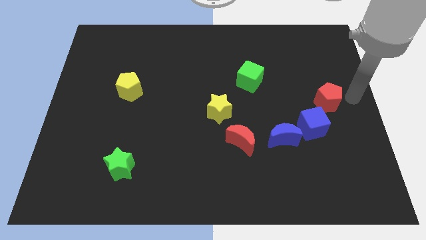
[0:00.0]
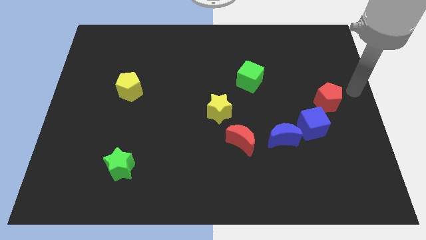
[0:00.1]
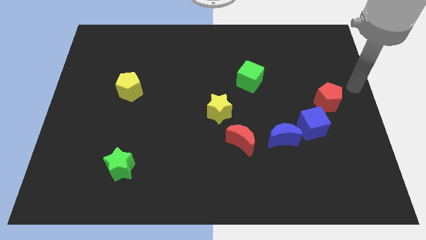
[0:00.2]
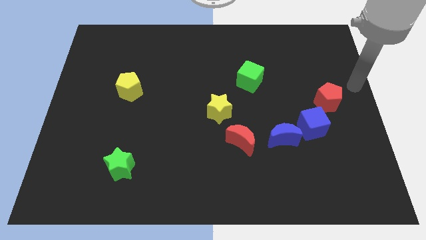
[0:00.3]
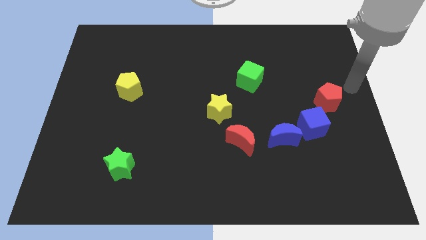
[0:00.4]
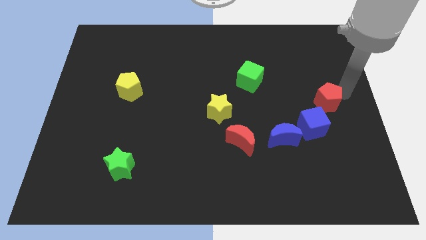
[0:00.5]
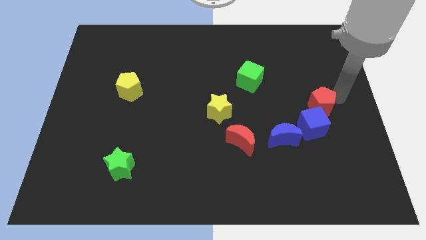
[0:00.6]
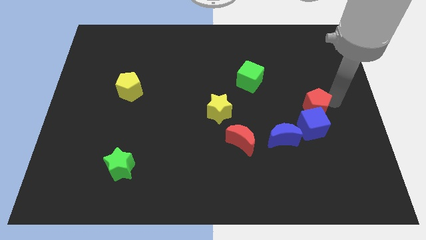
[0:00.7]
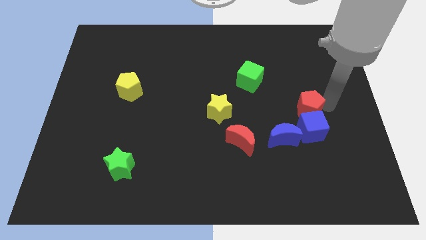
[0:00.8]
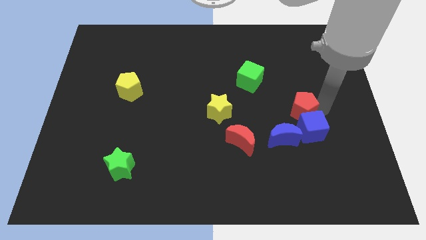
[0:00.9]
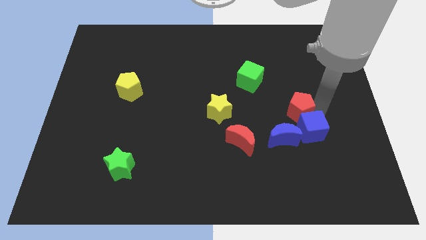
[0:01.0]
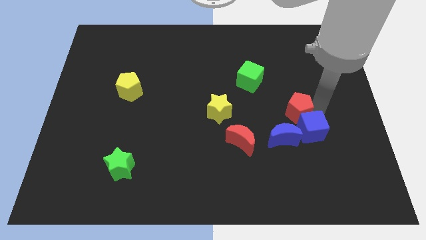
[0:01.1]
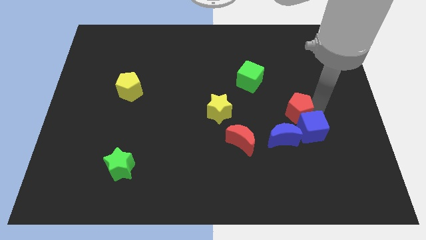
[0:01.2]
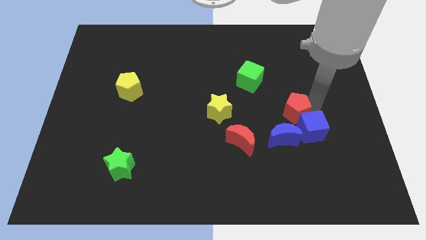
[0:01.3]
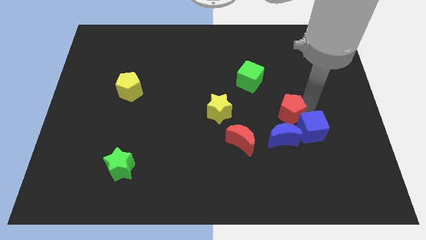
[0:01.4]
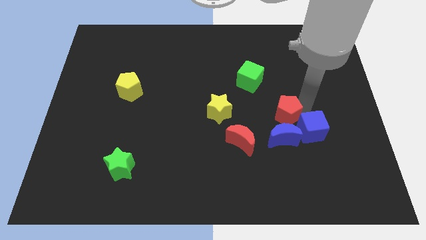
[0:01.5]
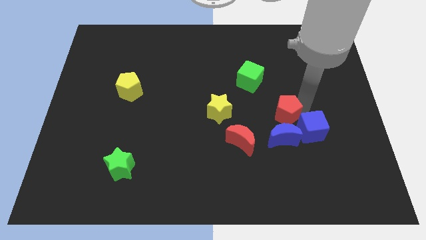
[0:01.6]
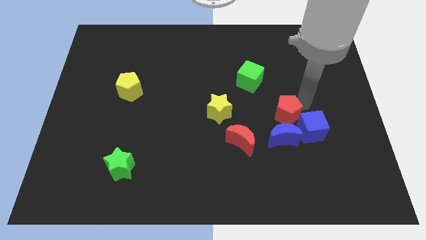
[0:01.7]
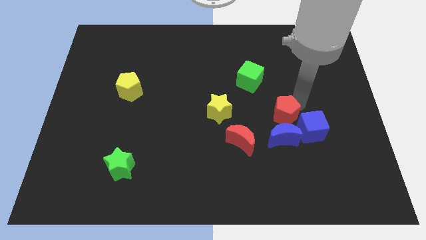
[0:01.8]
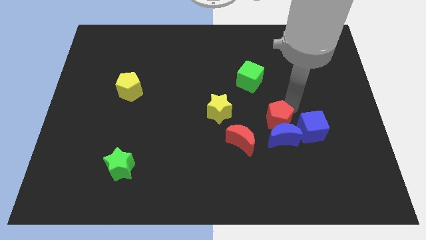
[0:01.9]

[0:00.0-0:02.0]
move the red pentagon above the blue moon

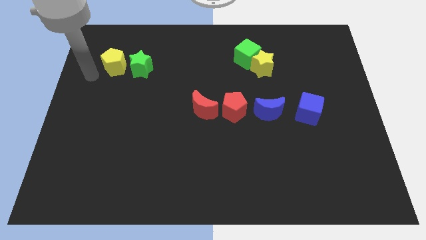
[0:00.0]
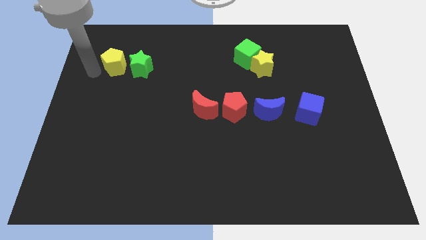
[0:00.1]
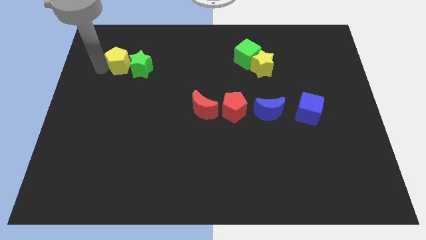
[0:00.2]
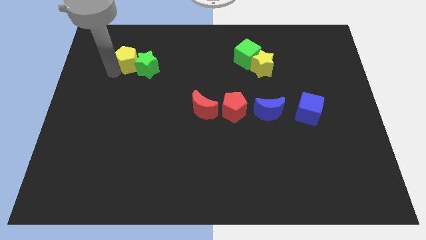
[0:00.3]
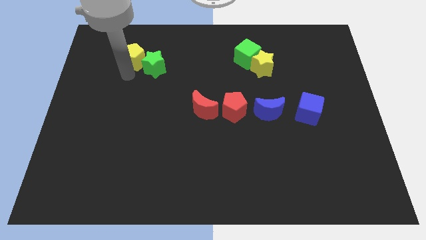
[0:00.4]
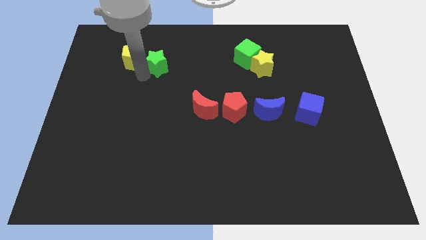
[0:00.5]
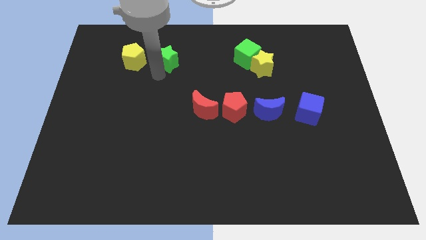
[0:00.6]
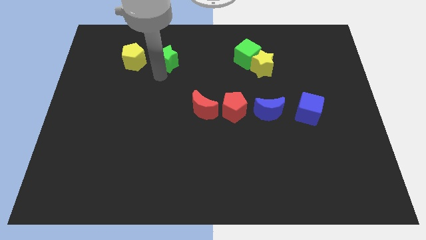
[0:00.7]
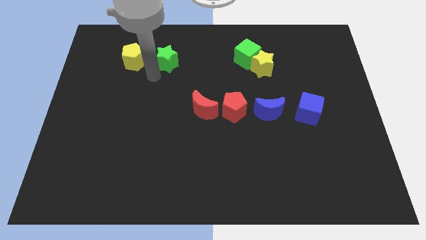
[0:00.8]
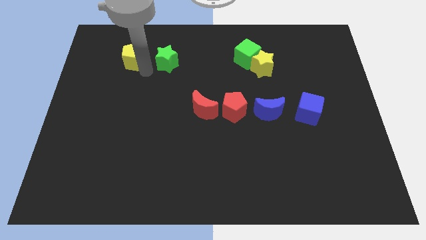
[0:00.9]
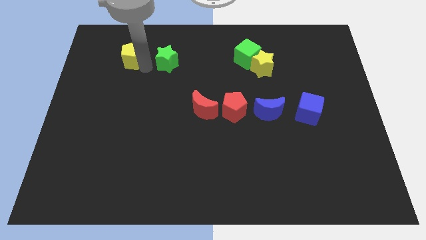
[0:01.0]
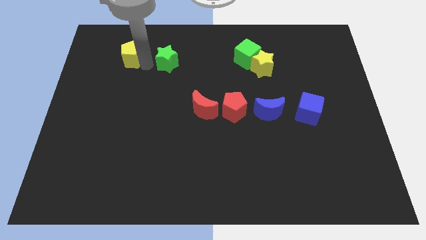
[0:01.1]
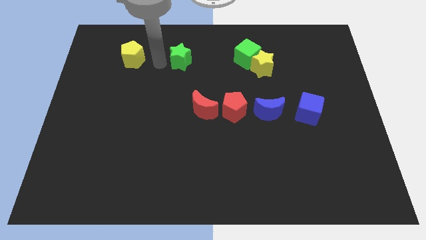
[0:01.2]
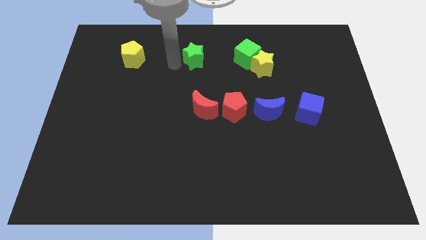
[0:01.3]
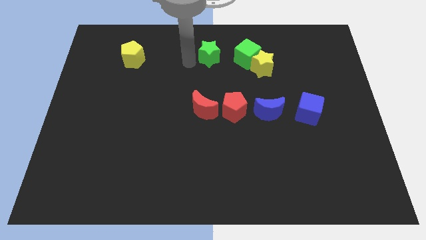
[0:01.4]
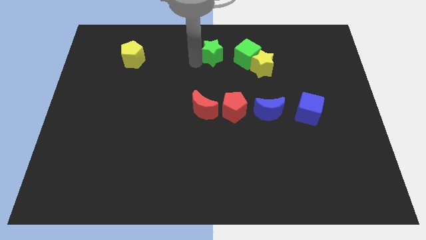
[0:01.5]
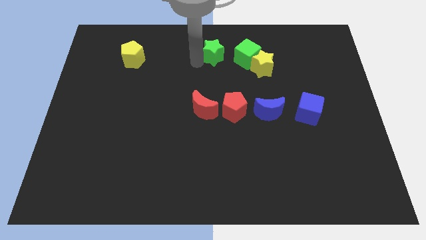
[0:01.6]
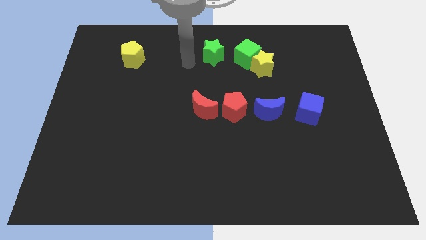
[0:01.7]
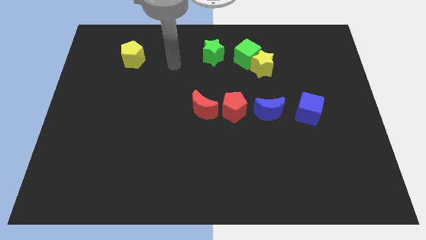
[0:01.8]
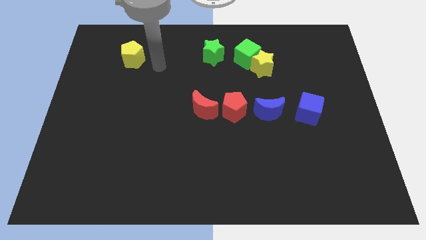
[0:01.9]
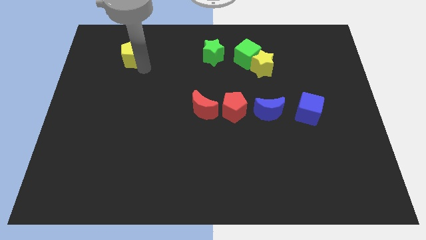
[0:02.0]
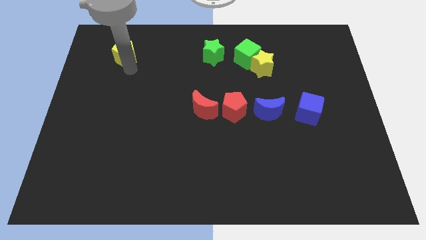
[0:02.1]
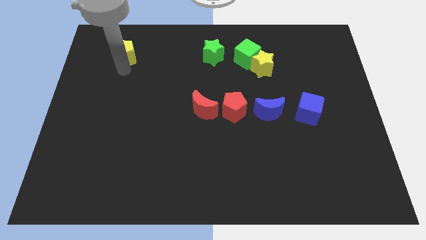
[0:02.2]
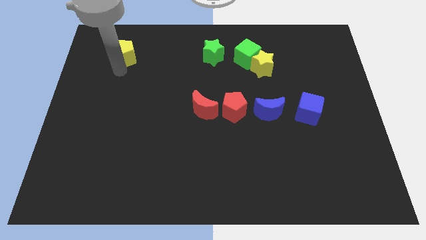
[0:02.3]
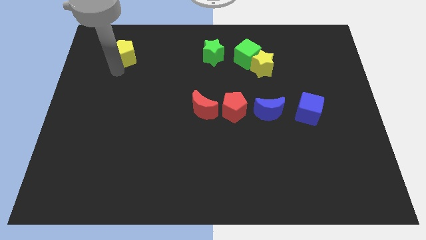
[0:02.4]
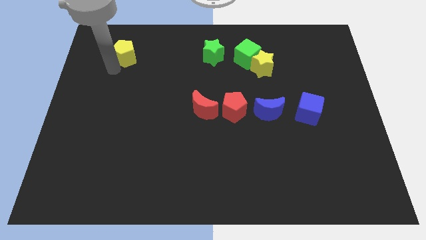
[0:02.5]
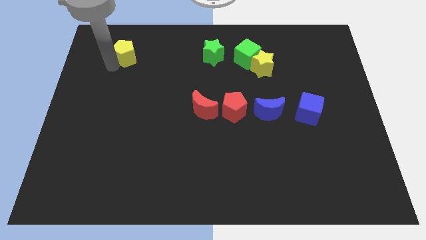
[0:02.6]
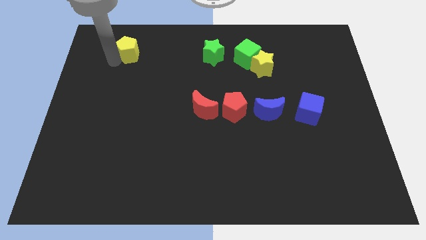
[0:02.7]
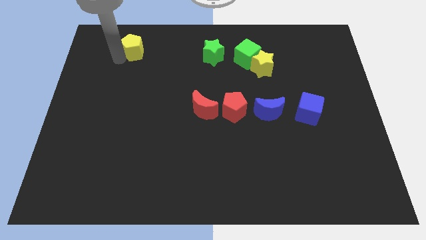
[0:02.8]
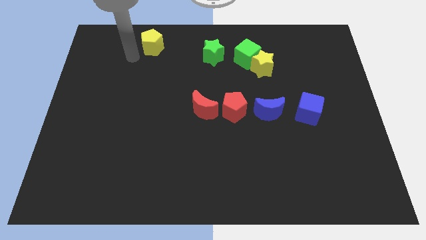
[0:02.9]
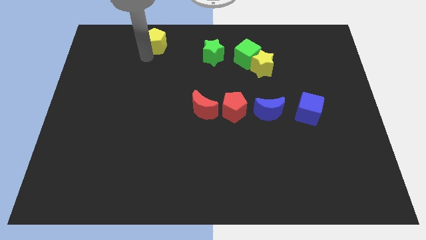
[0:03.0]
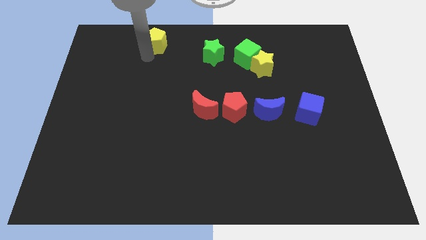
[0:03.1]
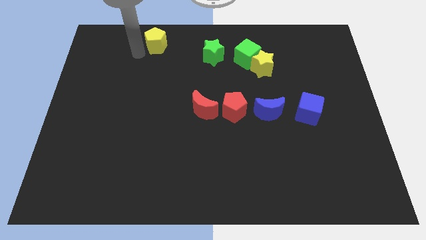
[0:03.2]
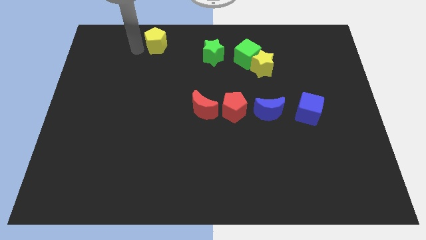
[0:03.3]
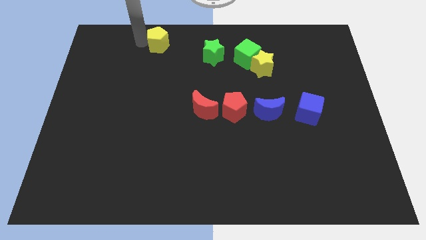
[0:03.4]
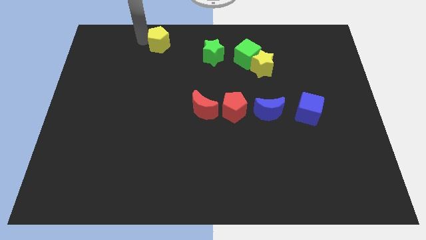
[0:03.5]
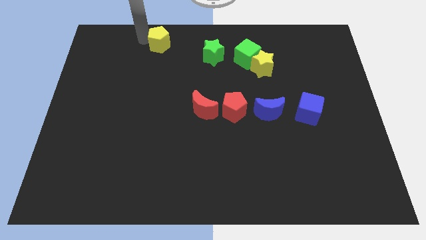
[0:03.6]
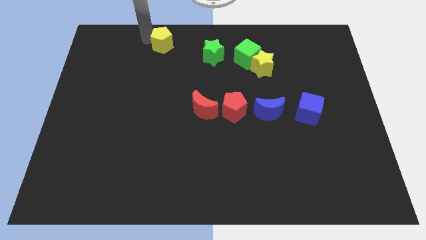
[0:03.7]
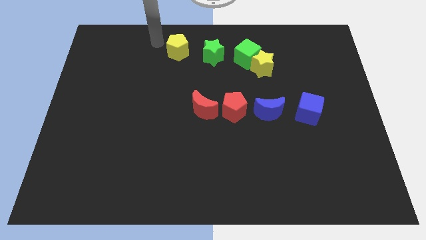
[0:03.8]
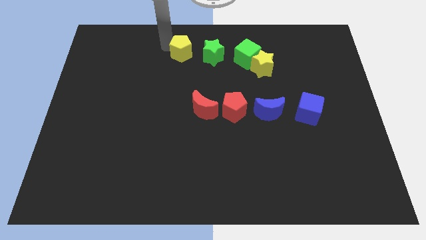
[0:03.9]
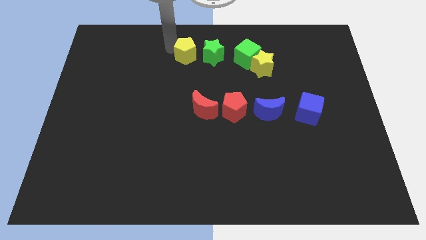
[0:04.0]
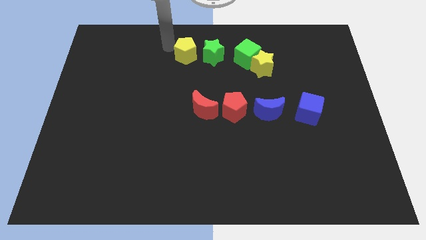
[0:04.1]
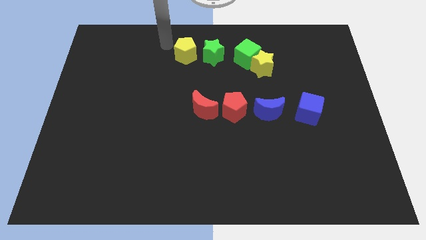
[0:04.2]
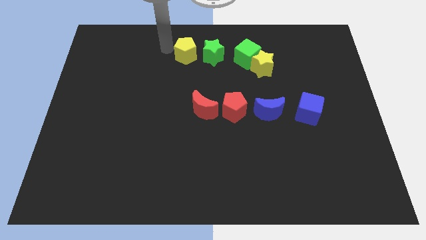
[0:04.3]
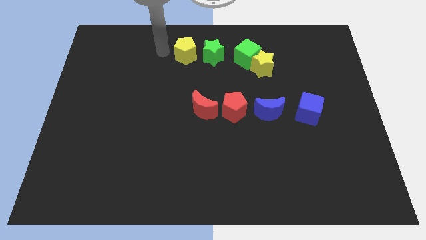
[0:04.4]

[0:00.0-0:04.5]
move the green star and yellow pentagon towards the top center

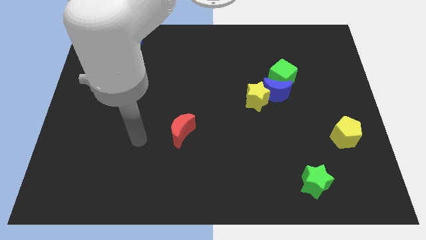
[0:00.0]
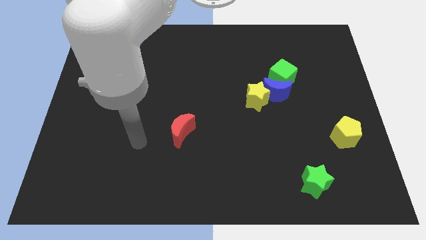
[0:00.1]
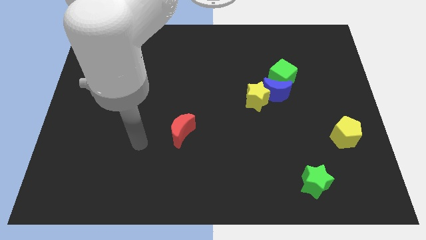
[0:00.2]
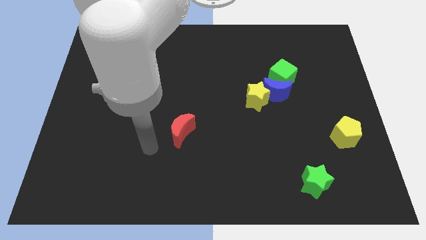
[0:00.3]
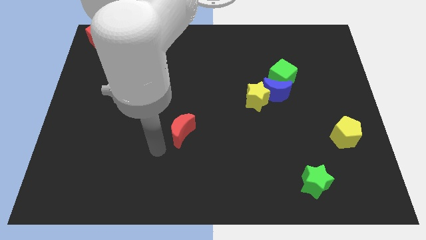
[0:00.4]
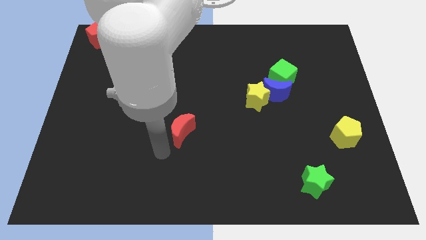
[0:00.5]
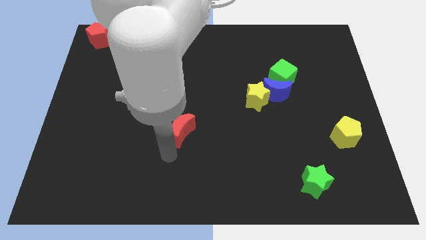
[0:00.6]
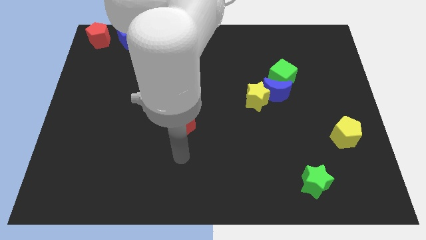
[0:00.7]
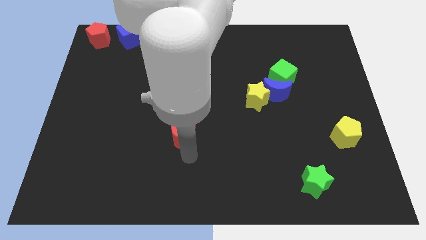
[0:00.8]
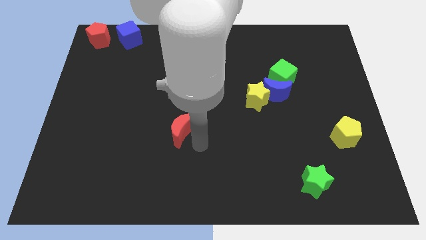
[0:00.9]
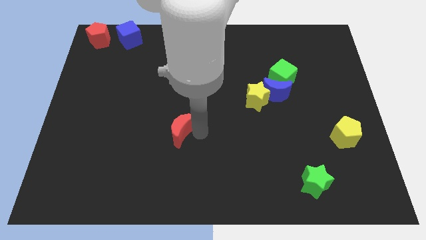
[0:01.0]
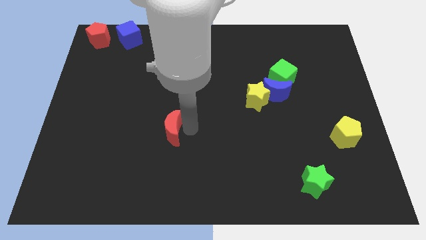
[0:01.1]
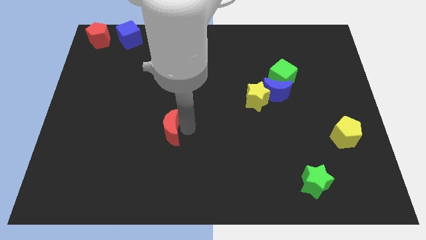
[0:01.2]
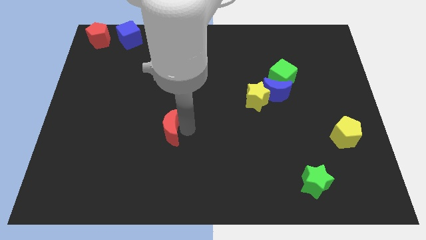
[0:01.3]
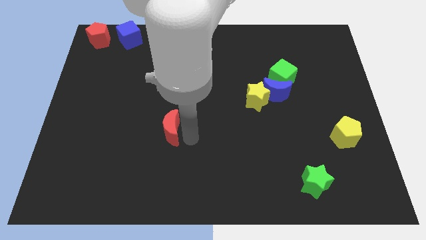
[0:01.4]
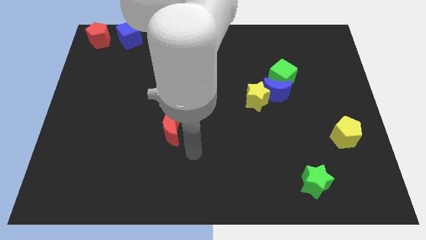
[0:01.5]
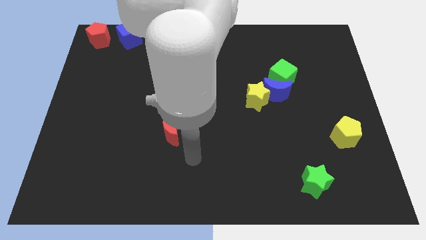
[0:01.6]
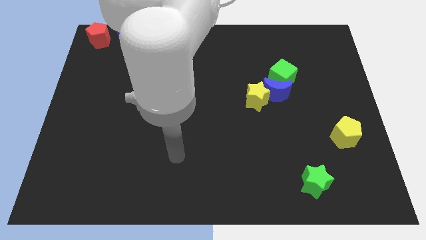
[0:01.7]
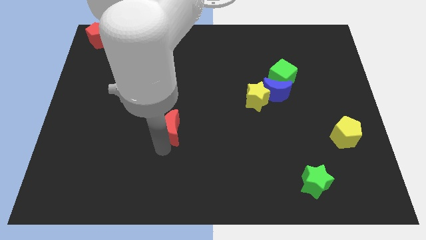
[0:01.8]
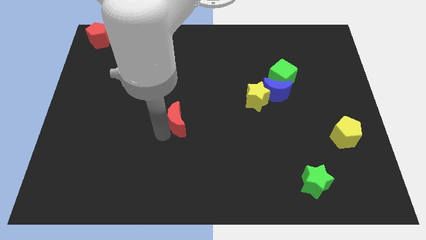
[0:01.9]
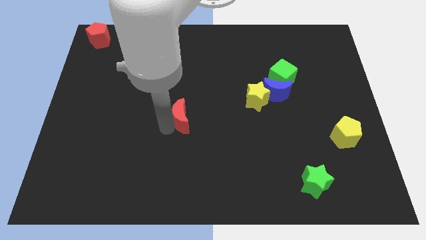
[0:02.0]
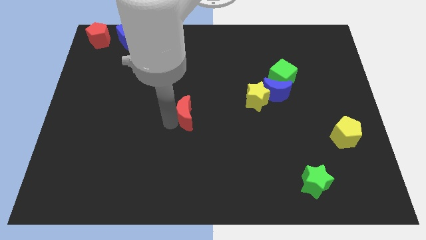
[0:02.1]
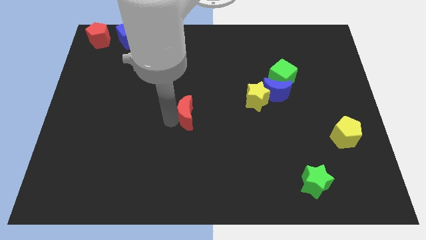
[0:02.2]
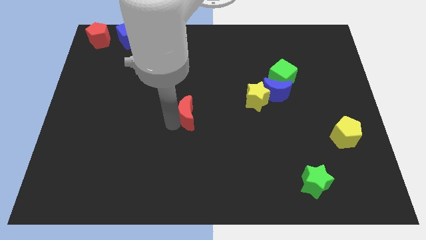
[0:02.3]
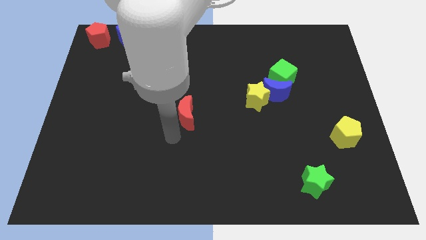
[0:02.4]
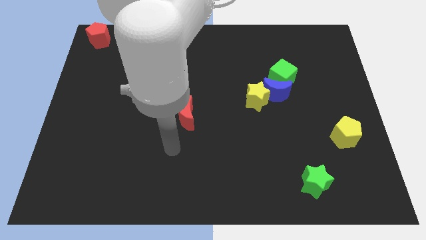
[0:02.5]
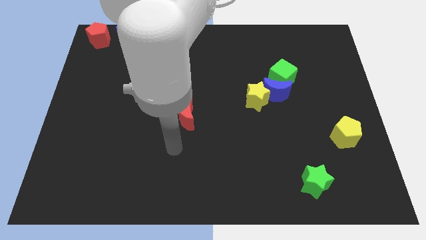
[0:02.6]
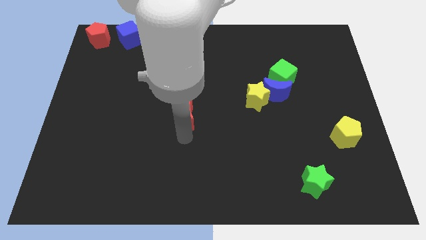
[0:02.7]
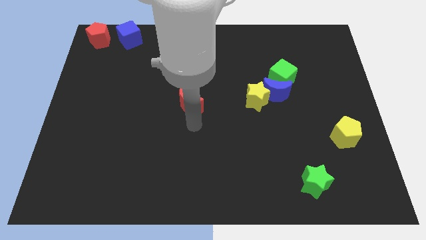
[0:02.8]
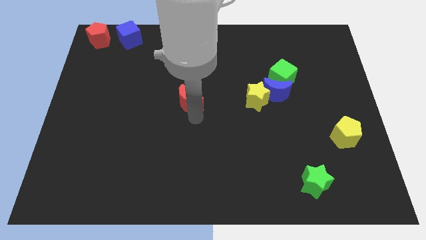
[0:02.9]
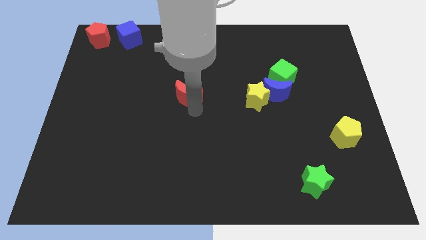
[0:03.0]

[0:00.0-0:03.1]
move red crescent at center
